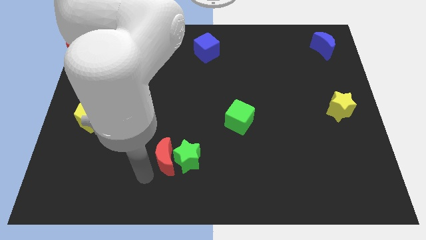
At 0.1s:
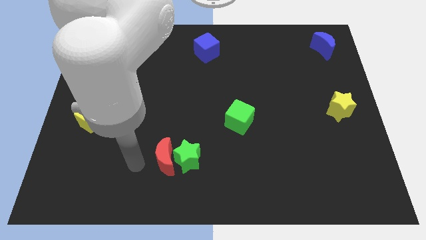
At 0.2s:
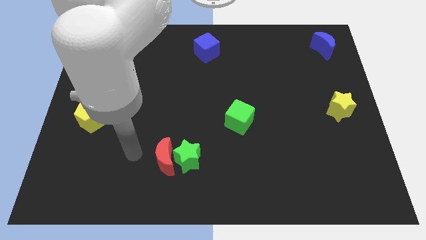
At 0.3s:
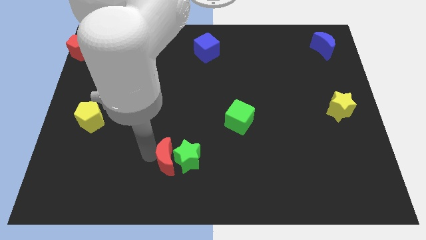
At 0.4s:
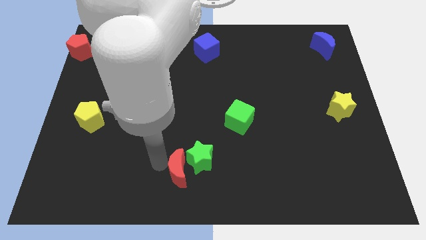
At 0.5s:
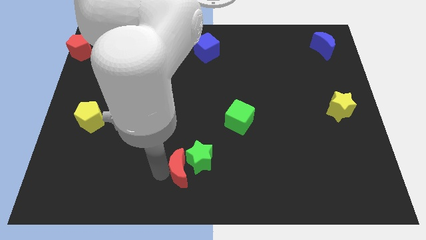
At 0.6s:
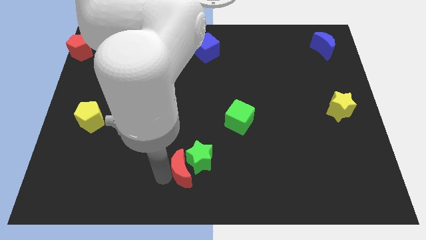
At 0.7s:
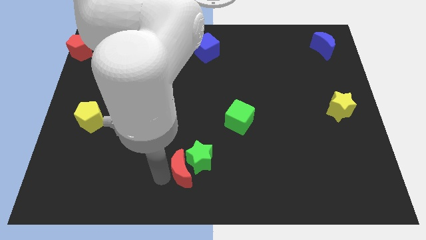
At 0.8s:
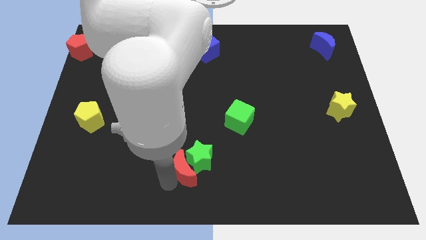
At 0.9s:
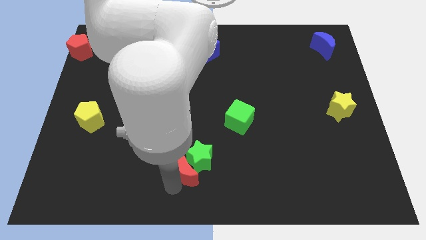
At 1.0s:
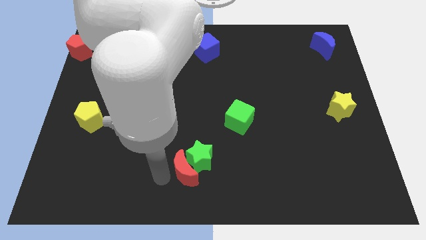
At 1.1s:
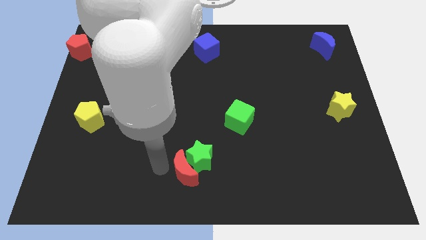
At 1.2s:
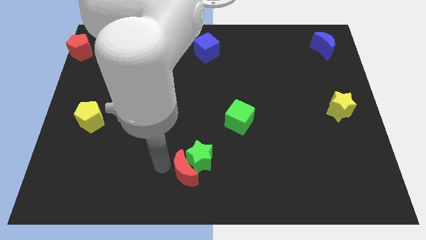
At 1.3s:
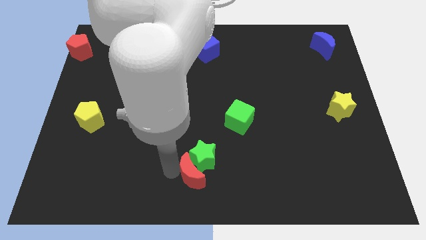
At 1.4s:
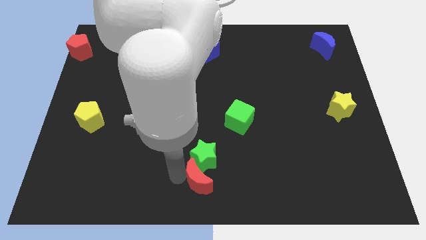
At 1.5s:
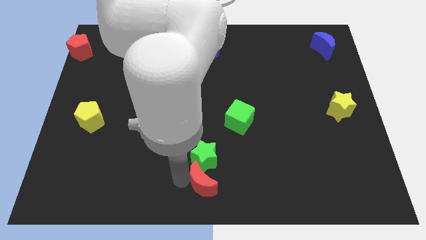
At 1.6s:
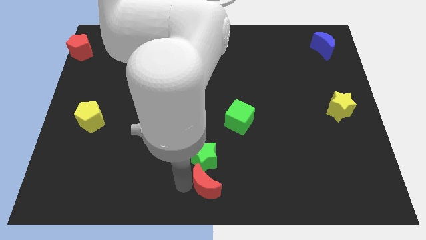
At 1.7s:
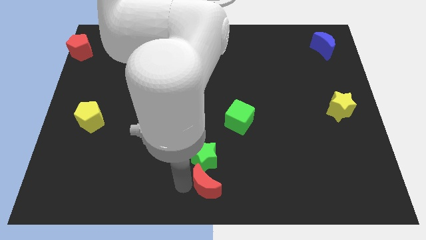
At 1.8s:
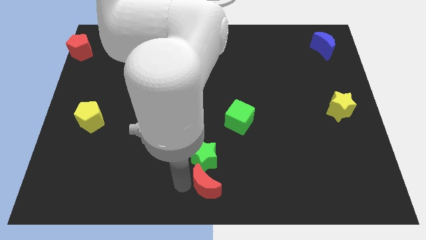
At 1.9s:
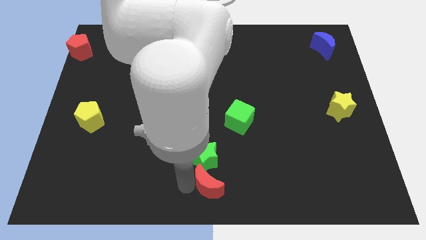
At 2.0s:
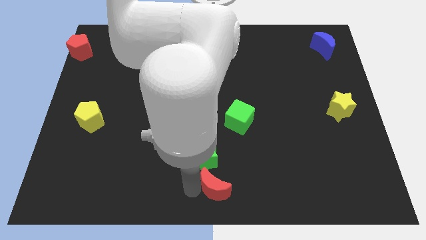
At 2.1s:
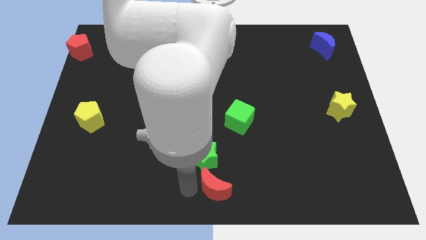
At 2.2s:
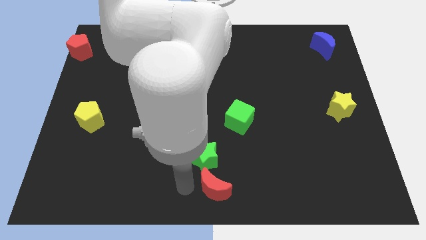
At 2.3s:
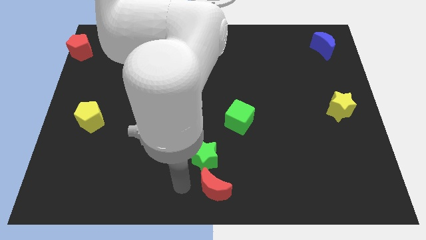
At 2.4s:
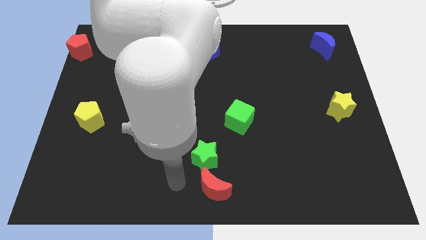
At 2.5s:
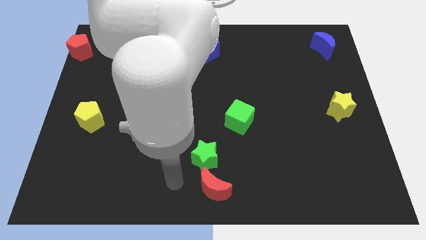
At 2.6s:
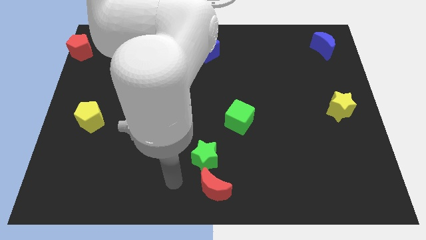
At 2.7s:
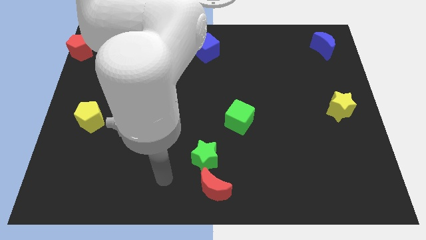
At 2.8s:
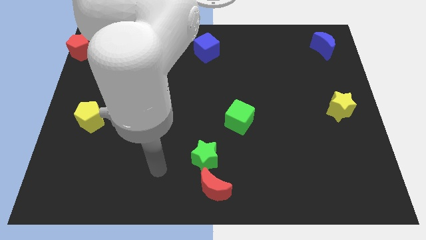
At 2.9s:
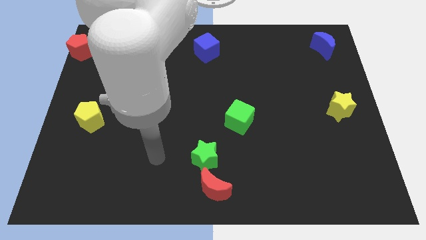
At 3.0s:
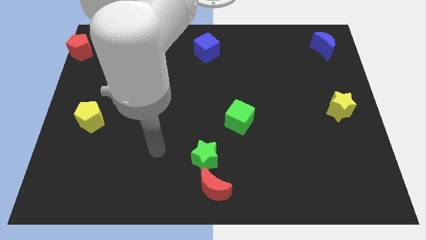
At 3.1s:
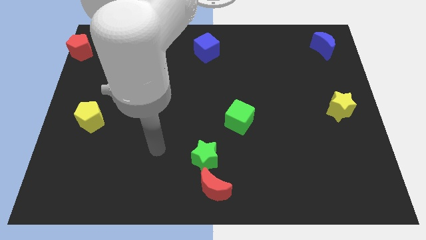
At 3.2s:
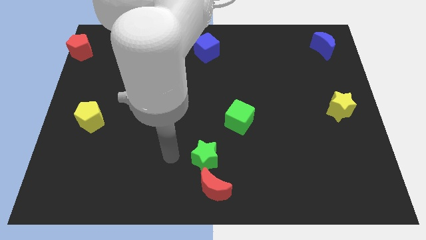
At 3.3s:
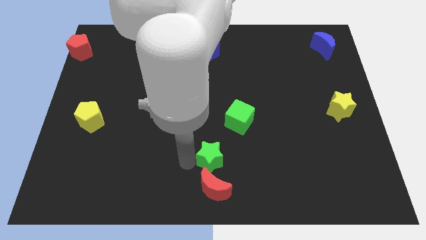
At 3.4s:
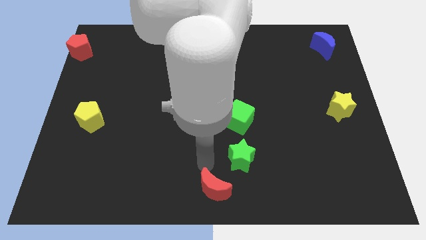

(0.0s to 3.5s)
push green star to the bottom of green cube

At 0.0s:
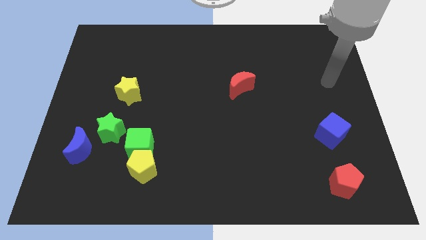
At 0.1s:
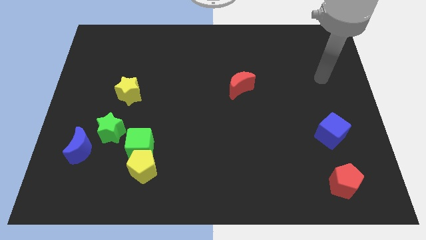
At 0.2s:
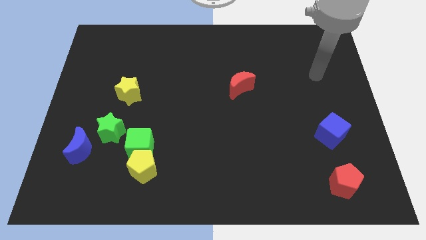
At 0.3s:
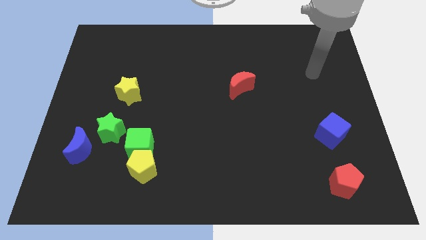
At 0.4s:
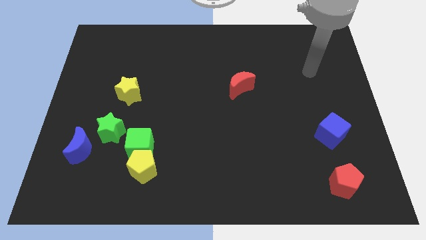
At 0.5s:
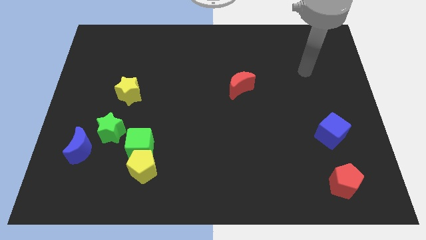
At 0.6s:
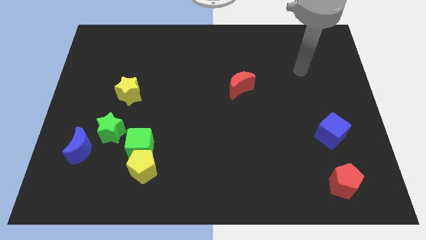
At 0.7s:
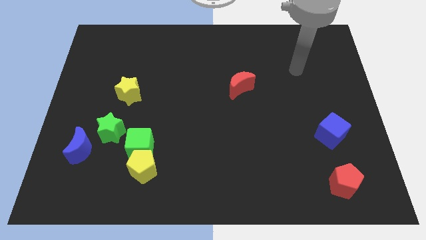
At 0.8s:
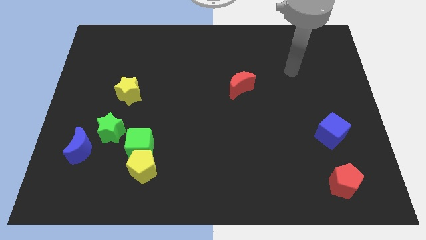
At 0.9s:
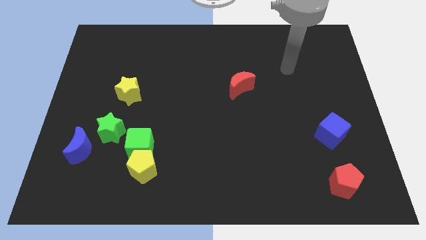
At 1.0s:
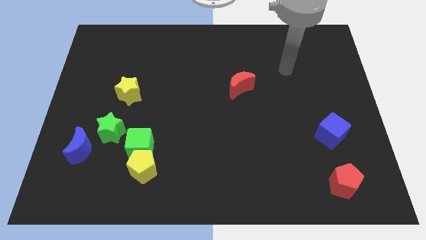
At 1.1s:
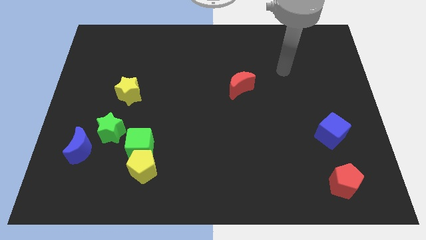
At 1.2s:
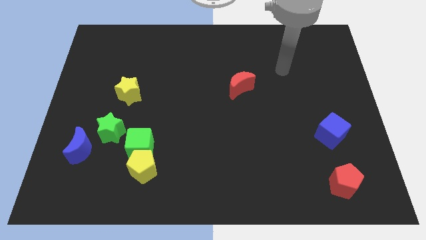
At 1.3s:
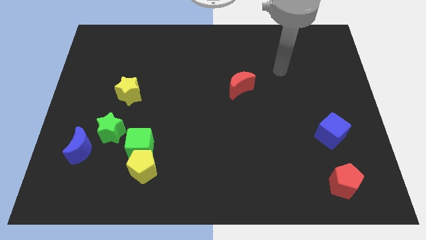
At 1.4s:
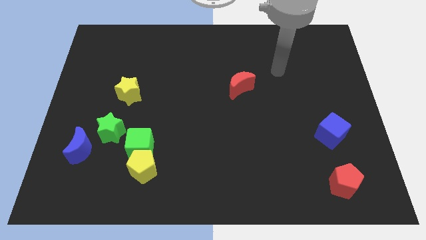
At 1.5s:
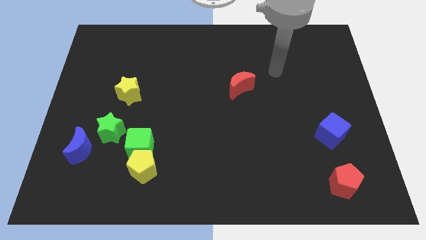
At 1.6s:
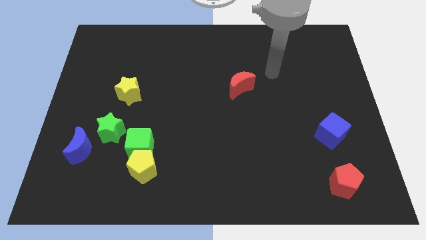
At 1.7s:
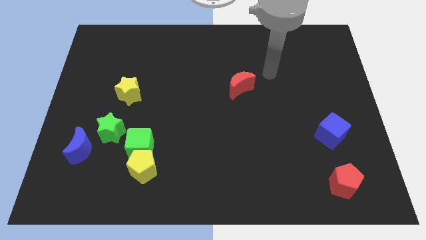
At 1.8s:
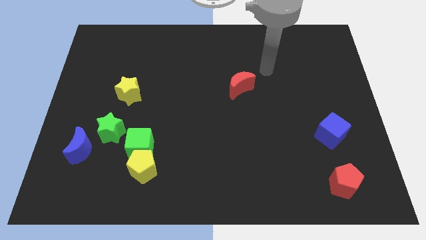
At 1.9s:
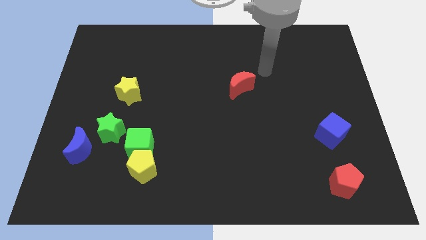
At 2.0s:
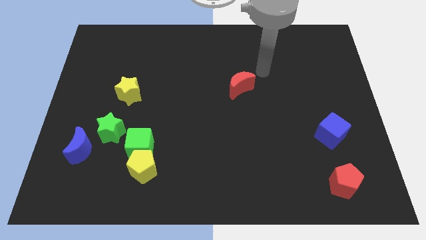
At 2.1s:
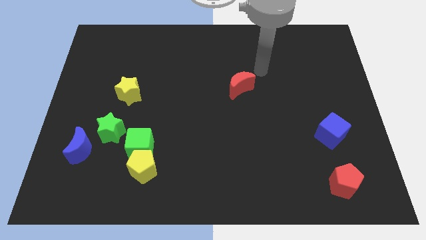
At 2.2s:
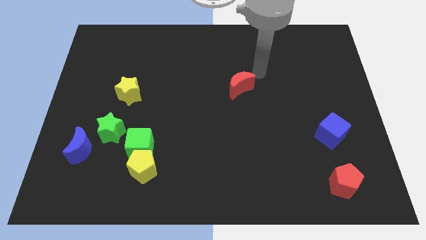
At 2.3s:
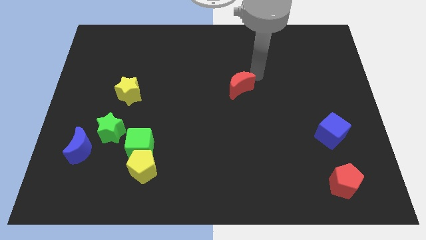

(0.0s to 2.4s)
point your arm at the top of the red crescent

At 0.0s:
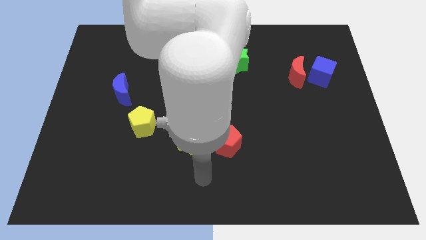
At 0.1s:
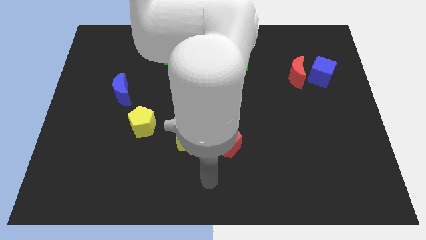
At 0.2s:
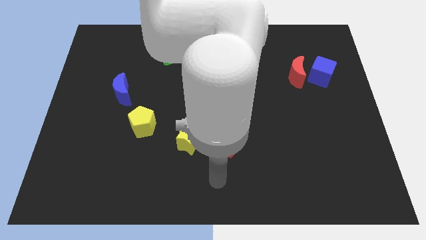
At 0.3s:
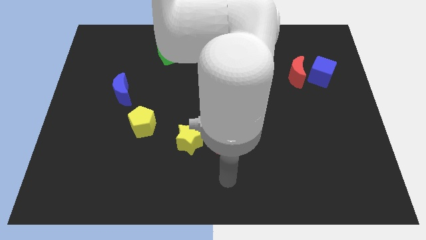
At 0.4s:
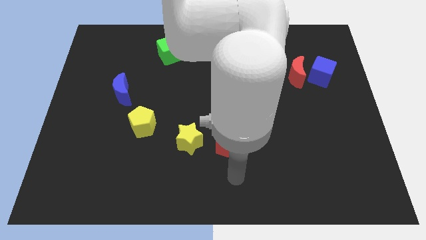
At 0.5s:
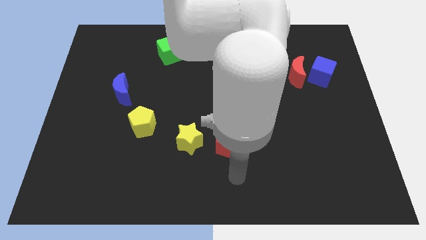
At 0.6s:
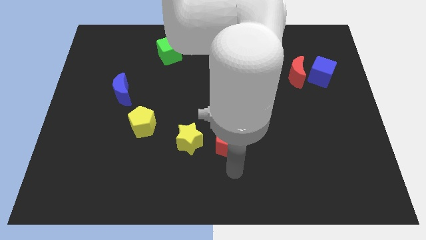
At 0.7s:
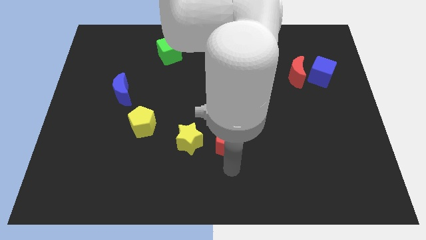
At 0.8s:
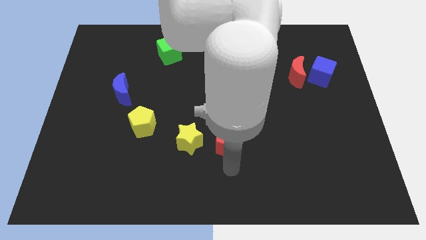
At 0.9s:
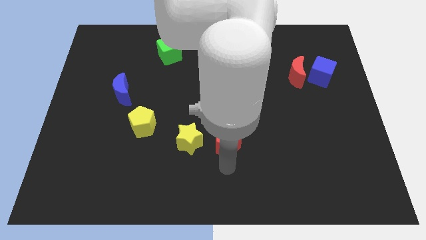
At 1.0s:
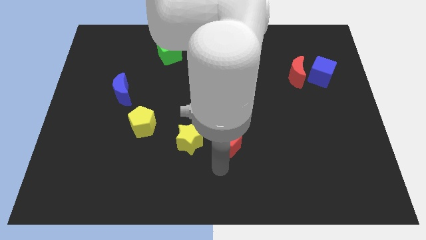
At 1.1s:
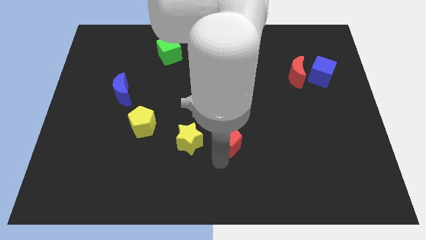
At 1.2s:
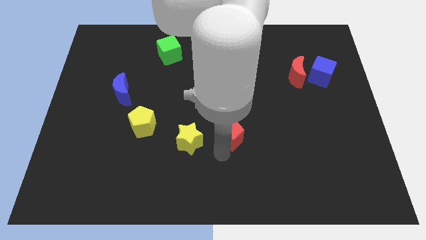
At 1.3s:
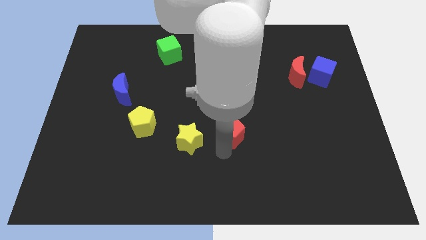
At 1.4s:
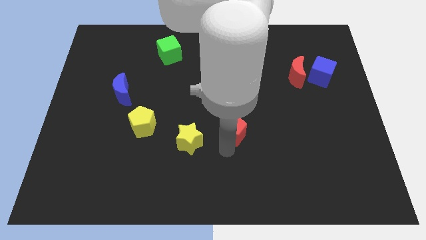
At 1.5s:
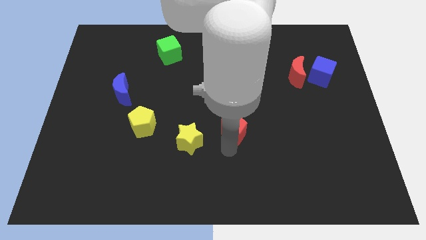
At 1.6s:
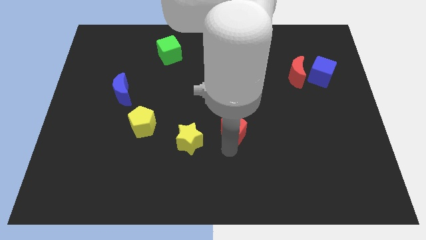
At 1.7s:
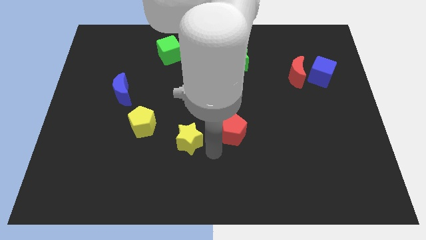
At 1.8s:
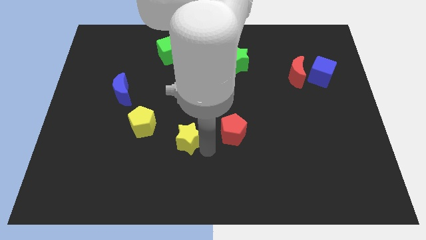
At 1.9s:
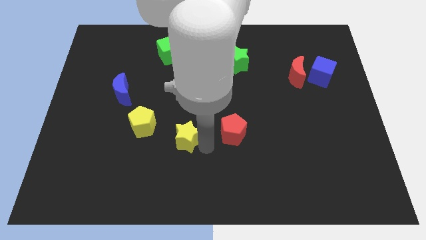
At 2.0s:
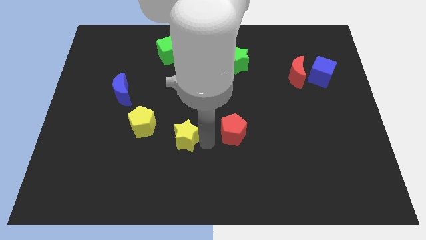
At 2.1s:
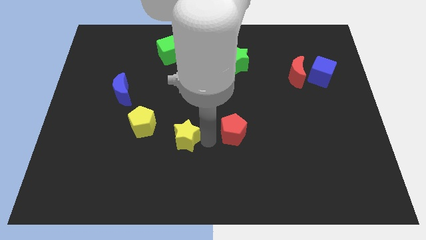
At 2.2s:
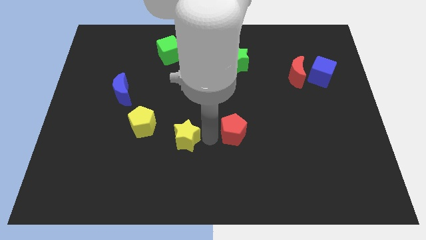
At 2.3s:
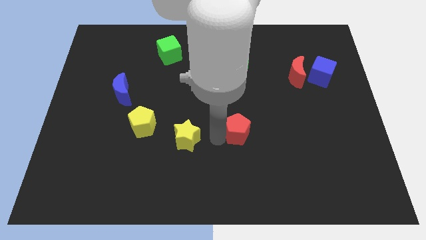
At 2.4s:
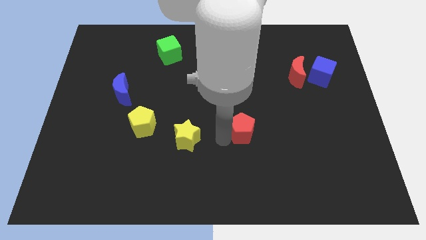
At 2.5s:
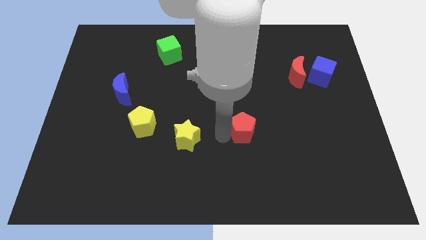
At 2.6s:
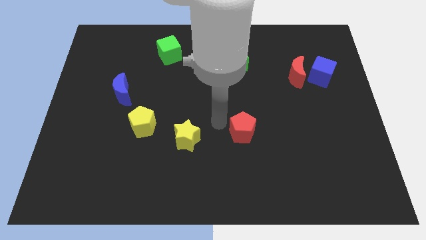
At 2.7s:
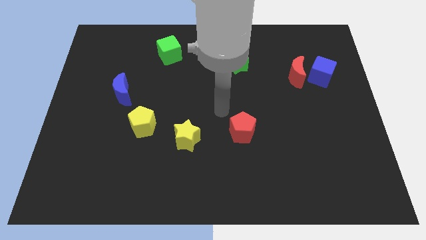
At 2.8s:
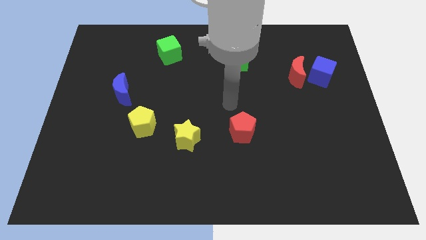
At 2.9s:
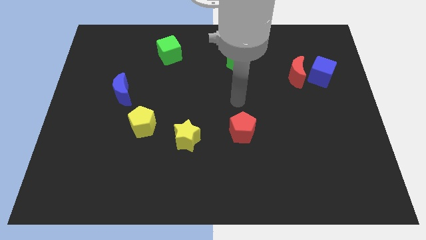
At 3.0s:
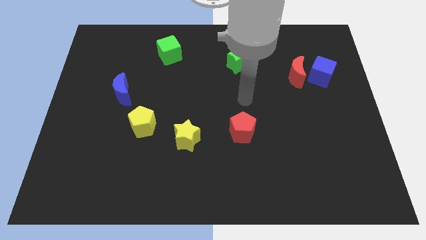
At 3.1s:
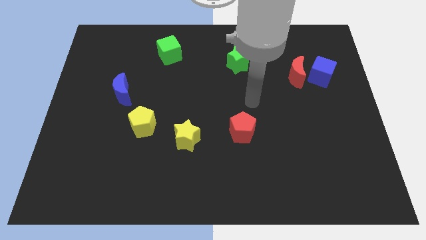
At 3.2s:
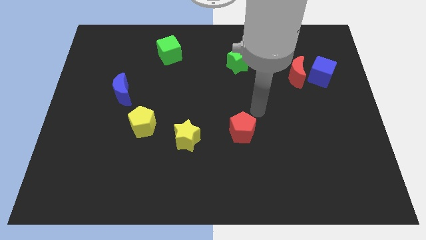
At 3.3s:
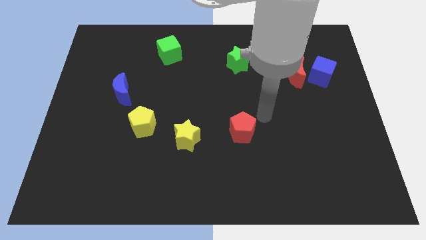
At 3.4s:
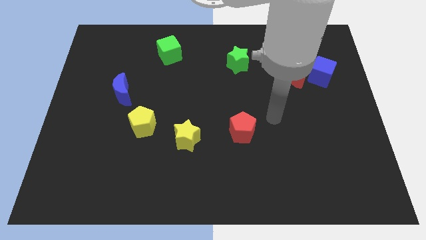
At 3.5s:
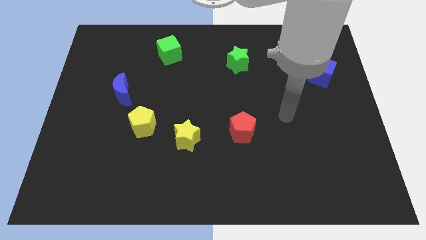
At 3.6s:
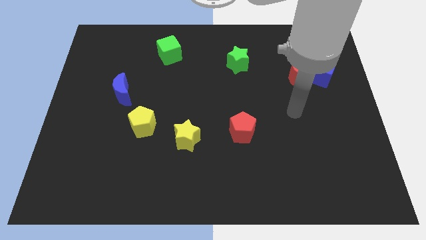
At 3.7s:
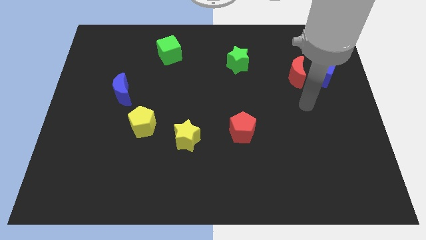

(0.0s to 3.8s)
move the red pentagon vertically to the bottom side of the green star
